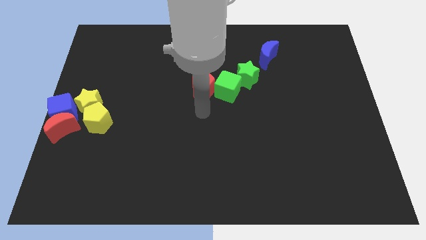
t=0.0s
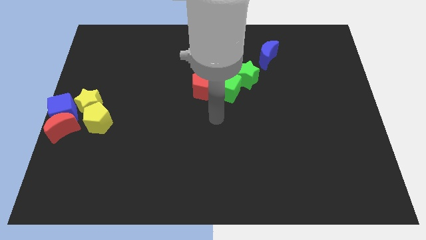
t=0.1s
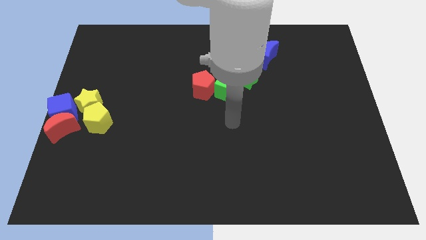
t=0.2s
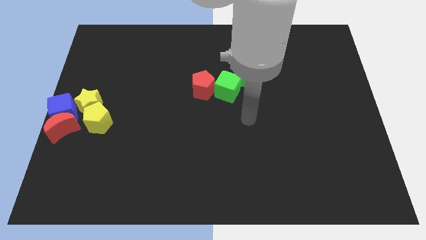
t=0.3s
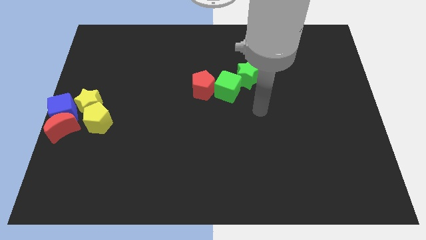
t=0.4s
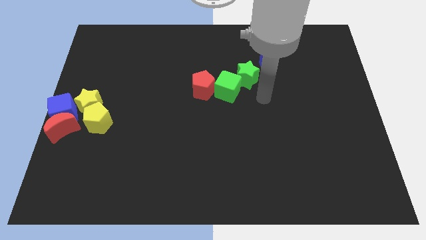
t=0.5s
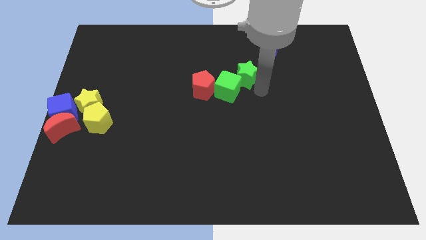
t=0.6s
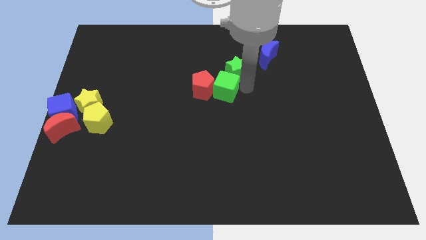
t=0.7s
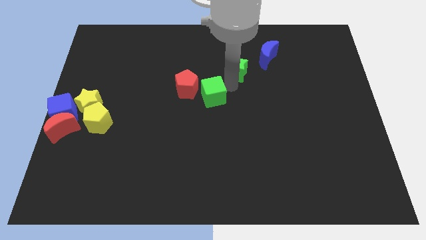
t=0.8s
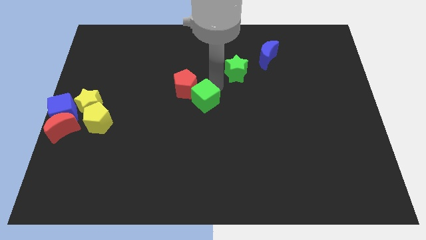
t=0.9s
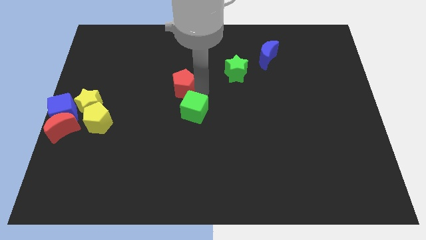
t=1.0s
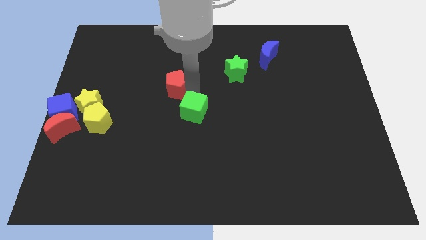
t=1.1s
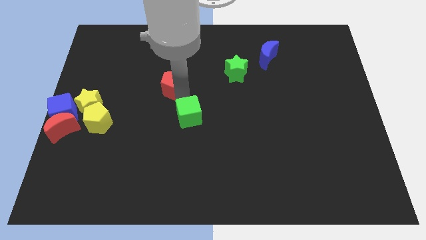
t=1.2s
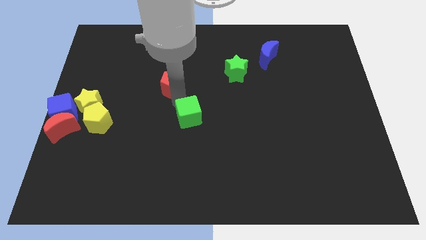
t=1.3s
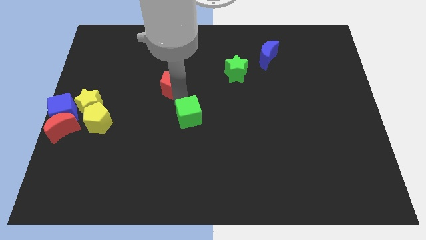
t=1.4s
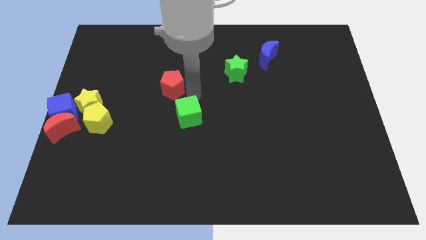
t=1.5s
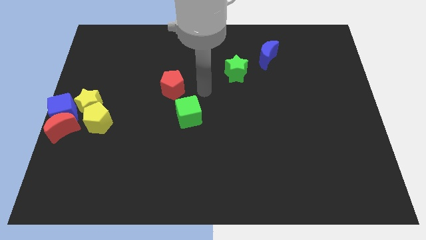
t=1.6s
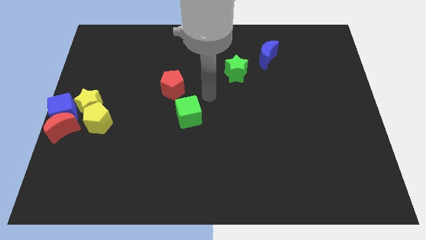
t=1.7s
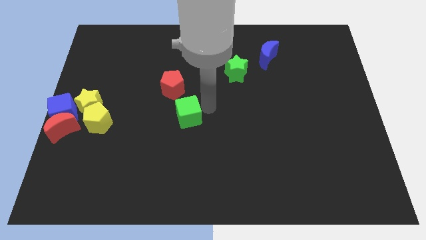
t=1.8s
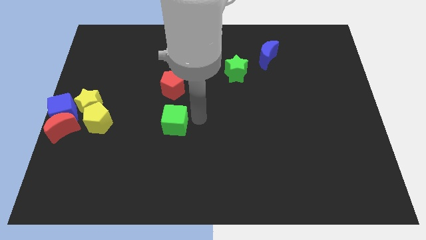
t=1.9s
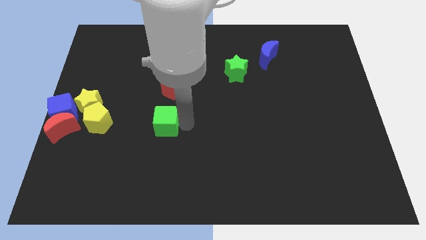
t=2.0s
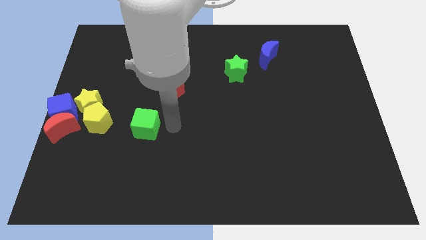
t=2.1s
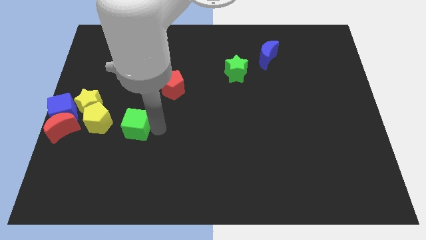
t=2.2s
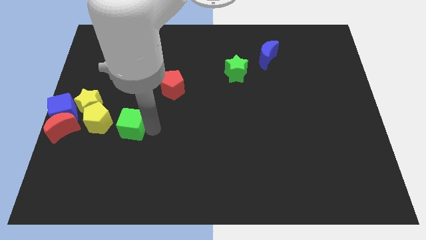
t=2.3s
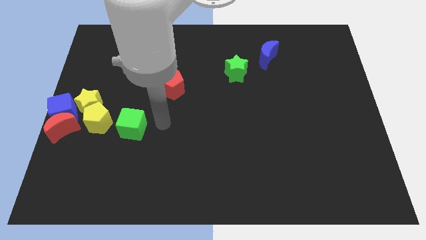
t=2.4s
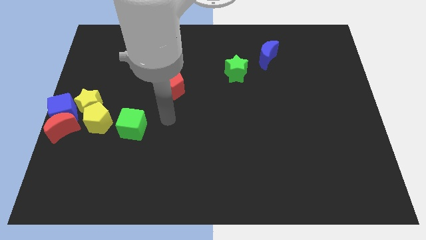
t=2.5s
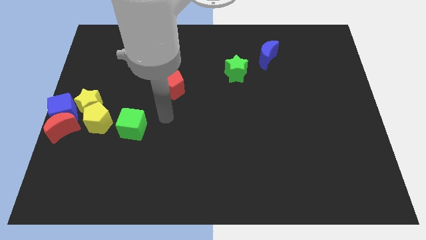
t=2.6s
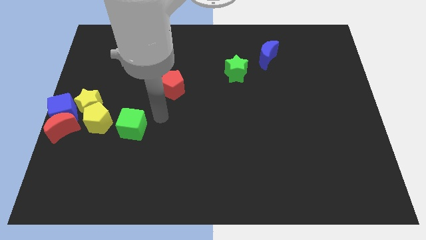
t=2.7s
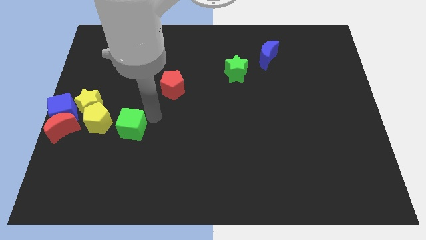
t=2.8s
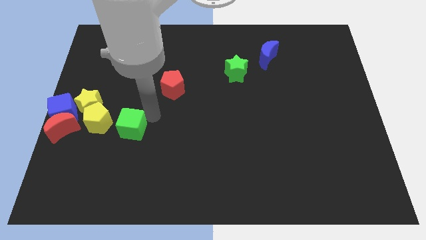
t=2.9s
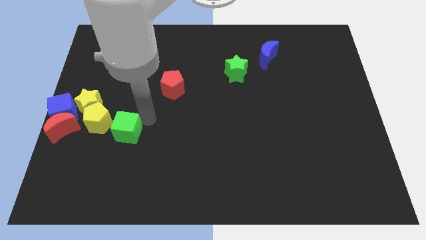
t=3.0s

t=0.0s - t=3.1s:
place the green cube right to the yellow pentagon

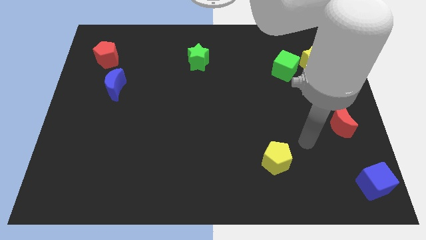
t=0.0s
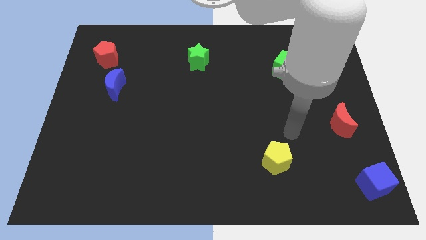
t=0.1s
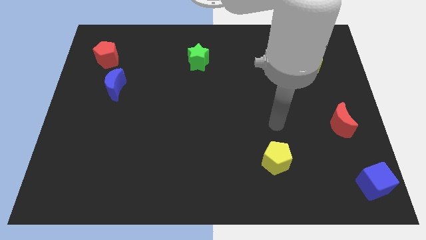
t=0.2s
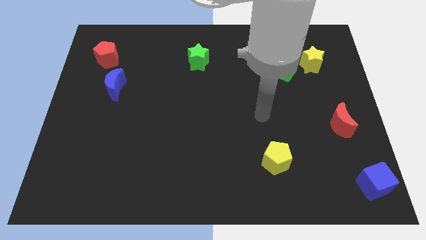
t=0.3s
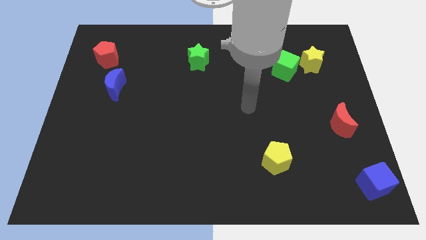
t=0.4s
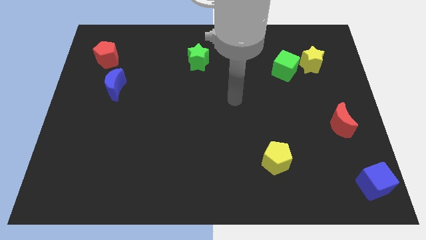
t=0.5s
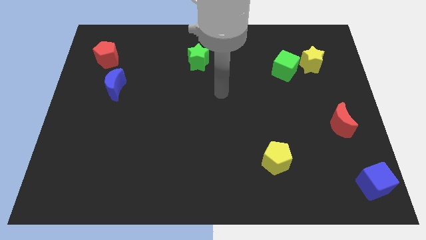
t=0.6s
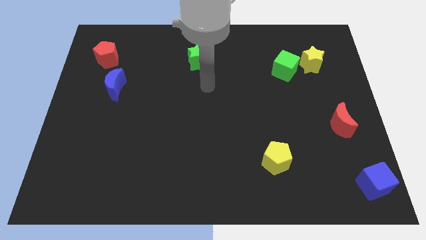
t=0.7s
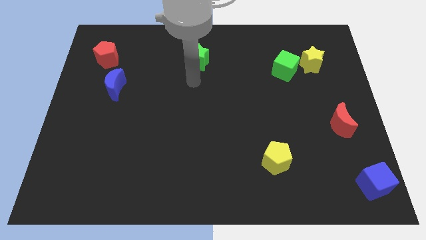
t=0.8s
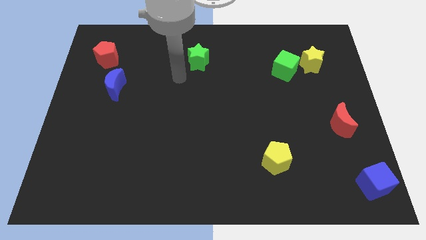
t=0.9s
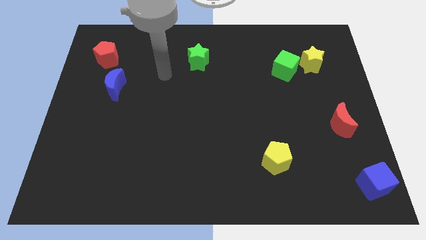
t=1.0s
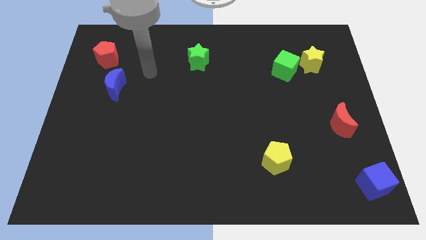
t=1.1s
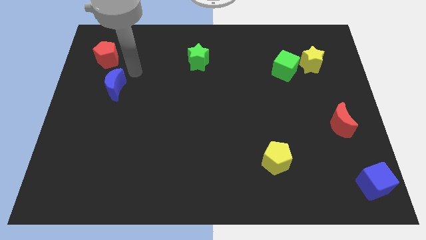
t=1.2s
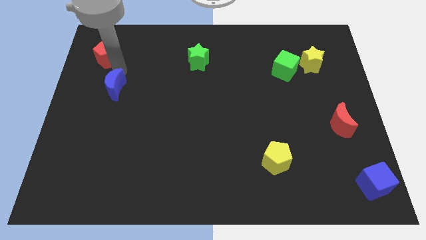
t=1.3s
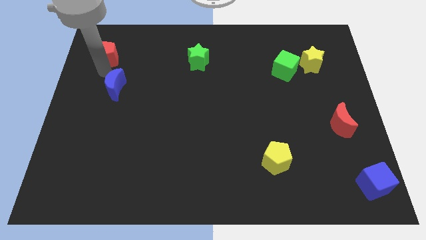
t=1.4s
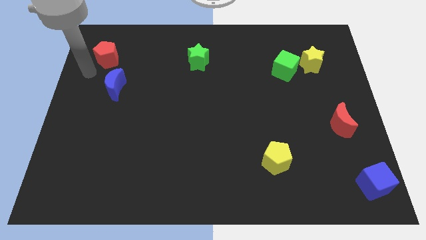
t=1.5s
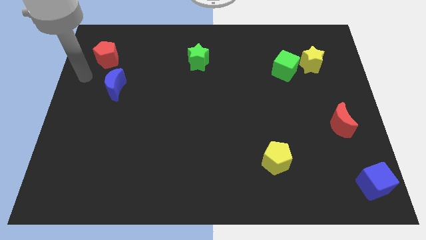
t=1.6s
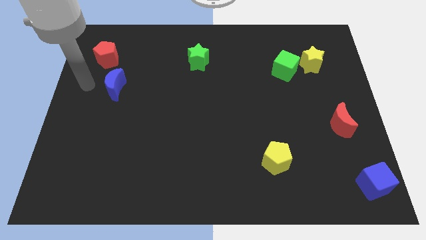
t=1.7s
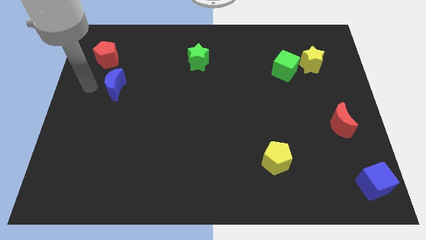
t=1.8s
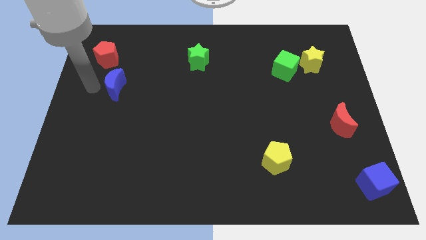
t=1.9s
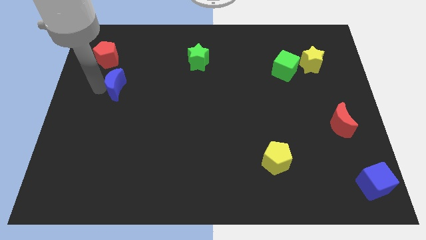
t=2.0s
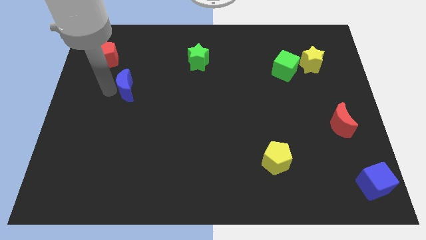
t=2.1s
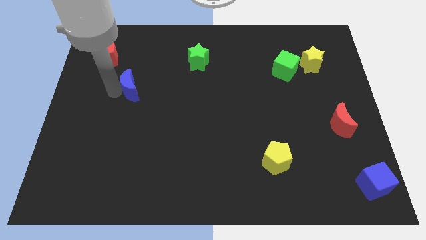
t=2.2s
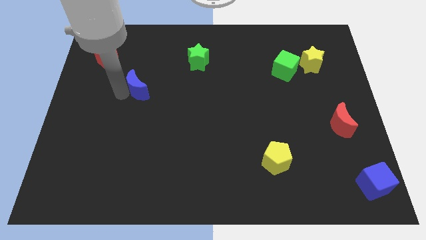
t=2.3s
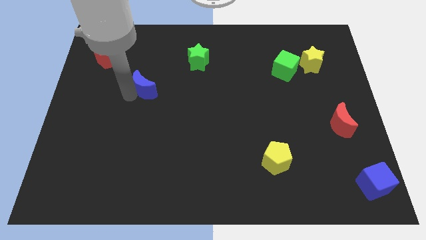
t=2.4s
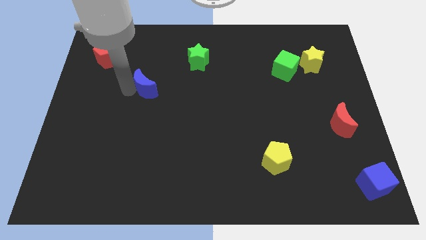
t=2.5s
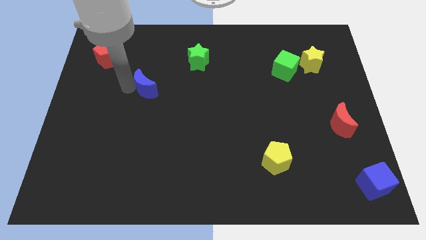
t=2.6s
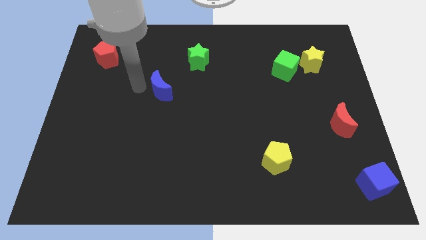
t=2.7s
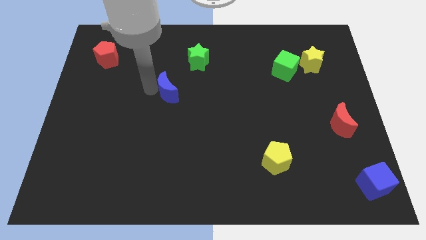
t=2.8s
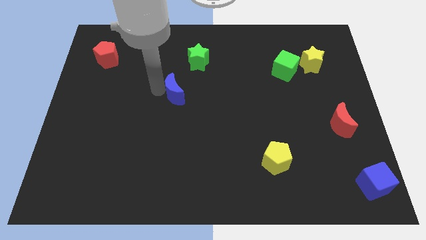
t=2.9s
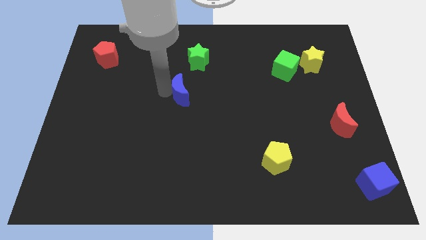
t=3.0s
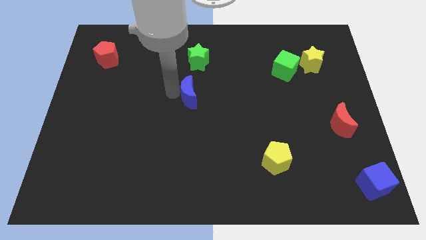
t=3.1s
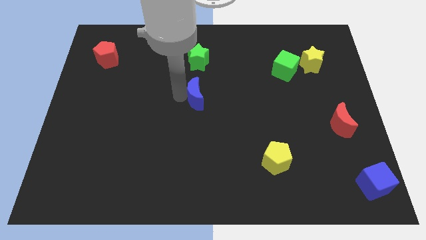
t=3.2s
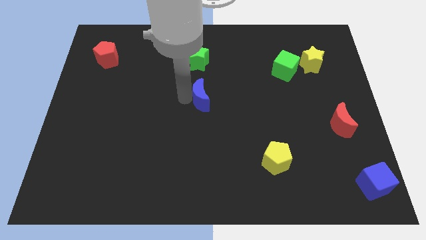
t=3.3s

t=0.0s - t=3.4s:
push blue crescent below green star

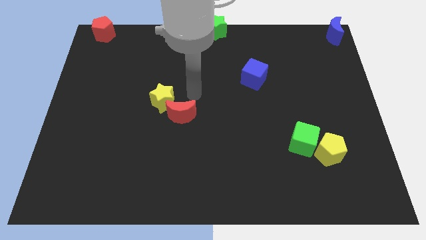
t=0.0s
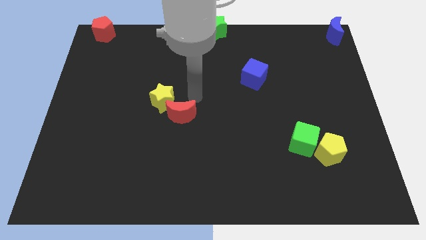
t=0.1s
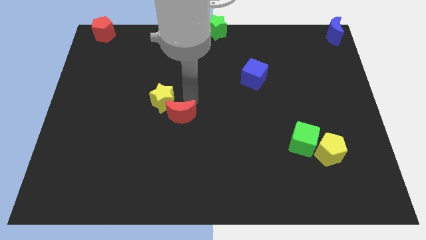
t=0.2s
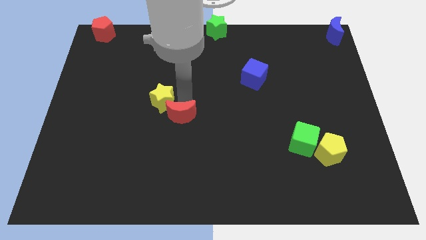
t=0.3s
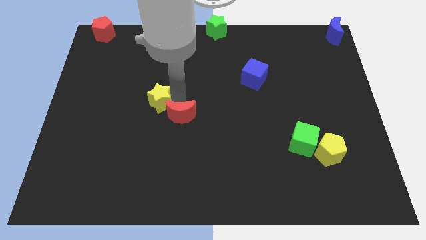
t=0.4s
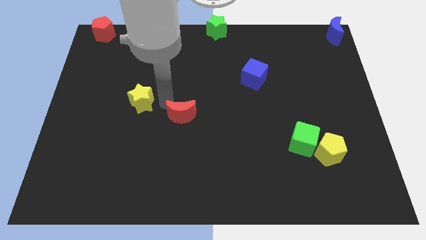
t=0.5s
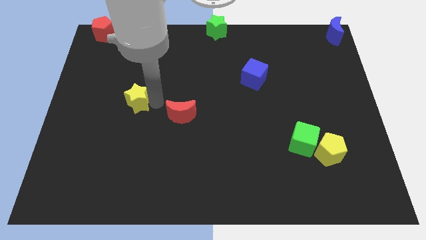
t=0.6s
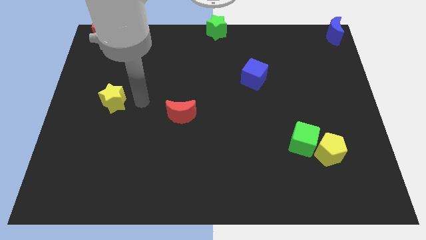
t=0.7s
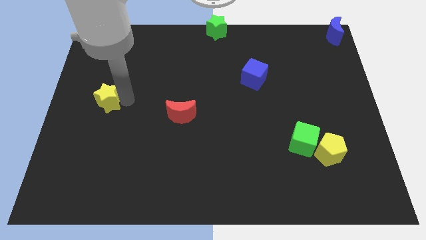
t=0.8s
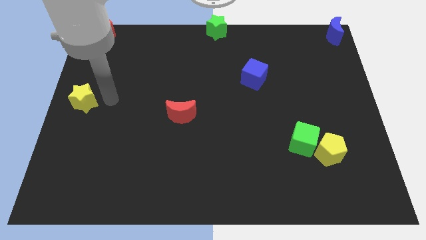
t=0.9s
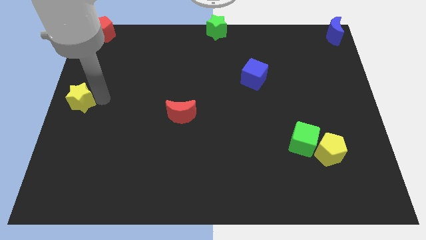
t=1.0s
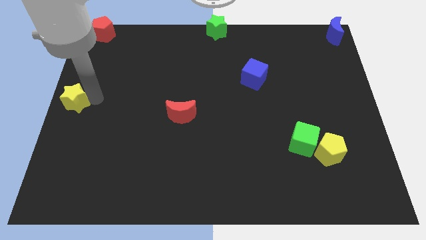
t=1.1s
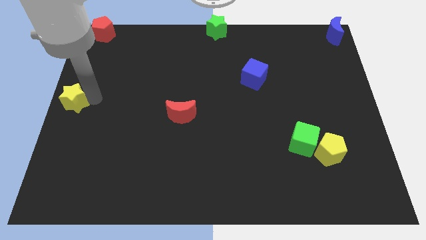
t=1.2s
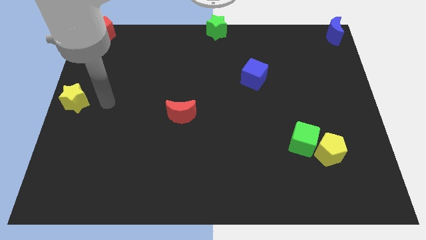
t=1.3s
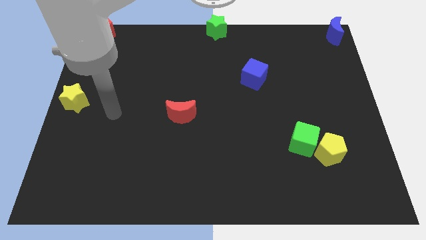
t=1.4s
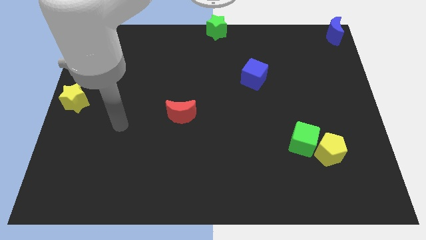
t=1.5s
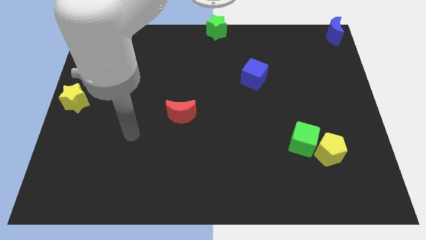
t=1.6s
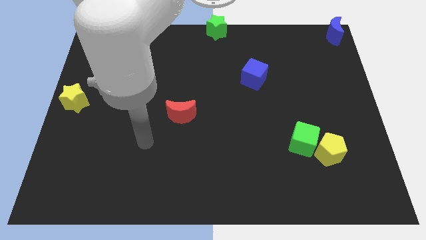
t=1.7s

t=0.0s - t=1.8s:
slide the yellow star to the left center

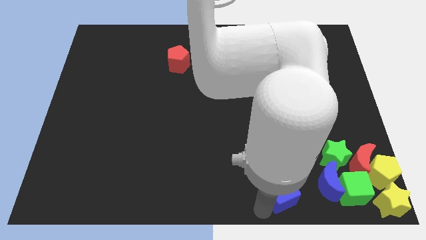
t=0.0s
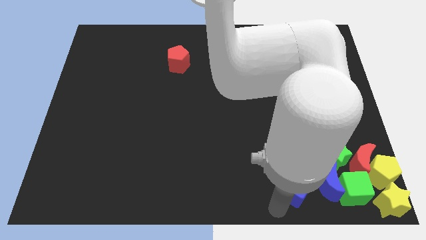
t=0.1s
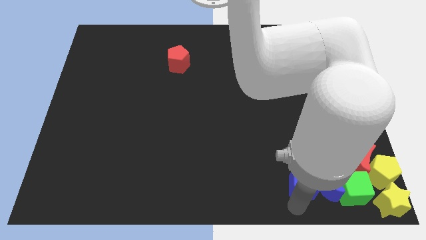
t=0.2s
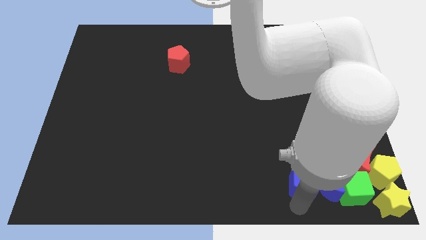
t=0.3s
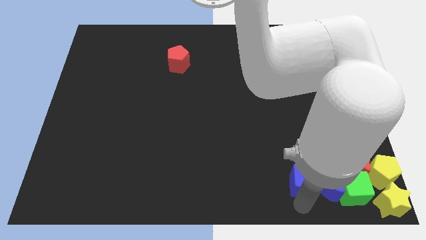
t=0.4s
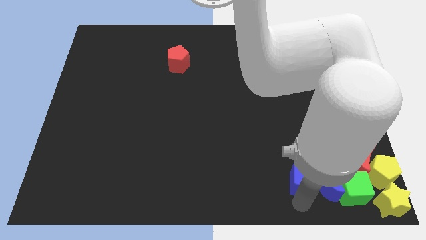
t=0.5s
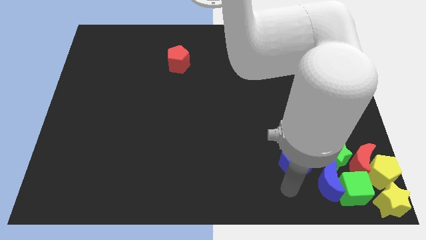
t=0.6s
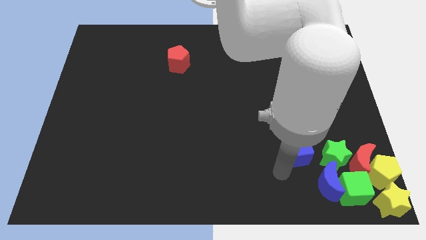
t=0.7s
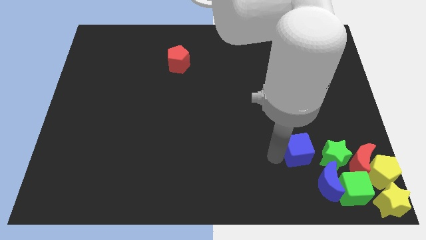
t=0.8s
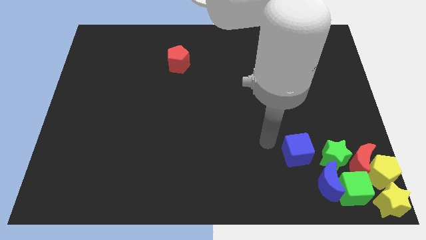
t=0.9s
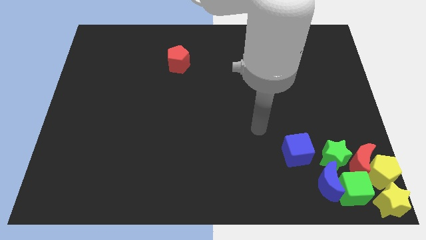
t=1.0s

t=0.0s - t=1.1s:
move the blue cube to the left of the green star
